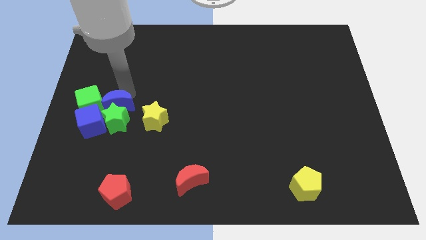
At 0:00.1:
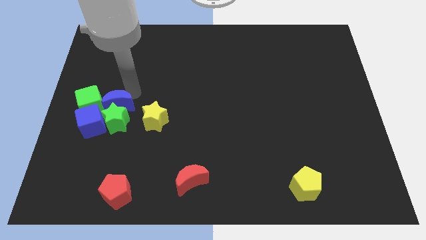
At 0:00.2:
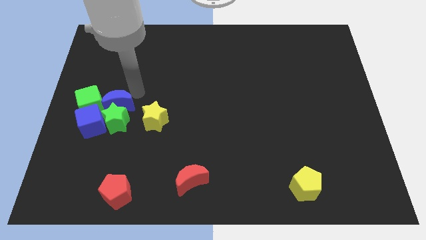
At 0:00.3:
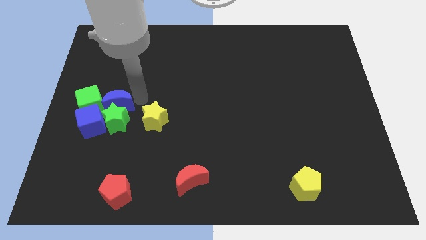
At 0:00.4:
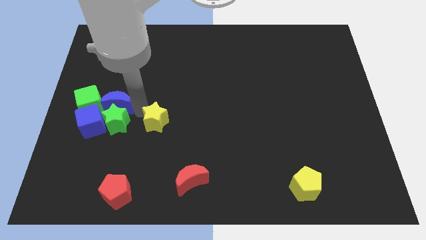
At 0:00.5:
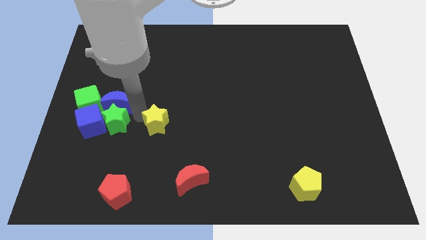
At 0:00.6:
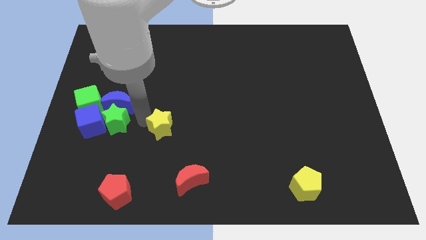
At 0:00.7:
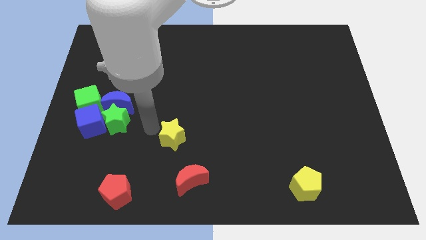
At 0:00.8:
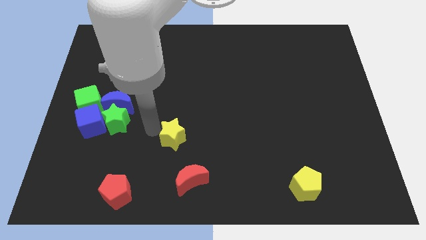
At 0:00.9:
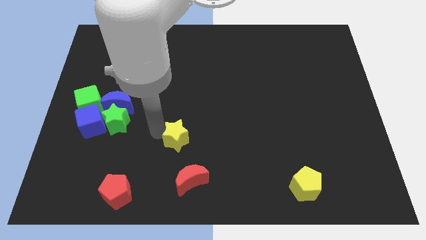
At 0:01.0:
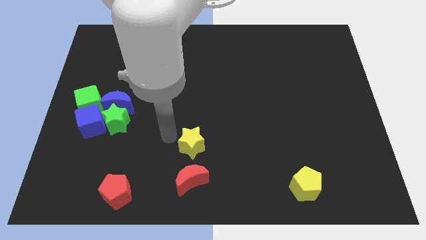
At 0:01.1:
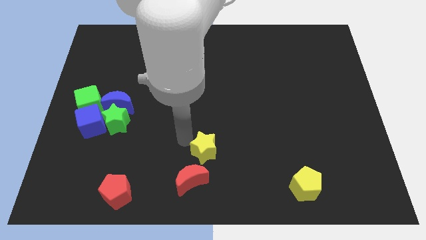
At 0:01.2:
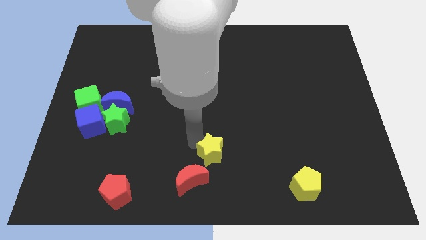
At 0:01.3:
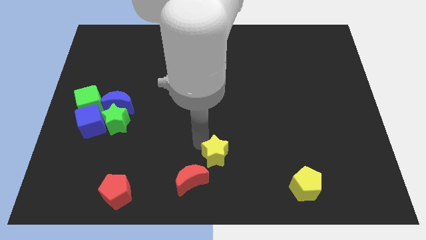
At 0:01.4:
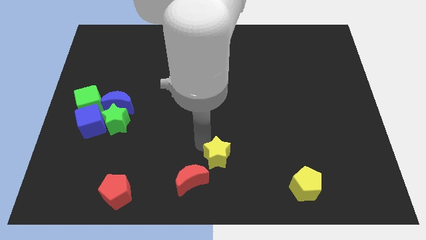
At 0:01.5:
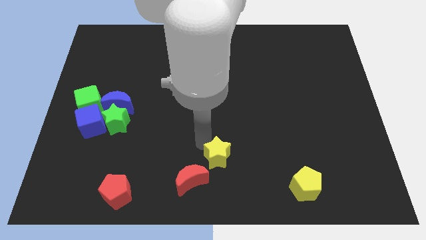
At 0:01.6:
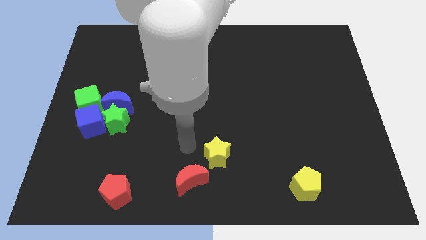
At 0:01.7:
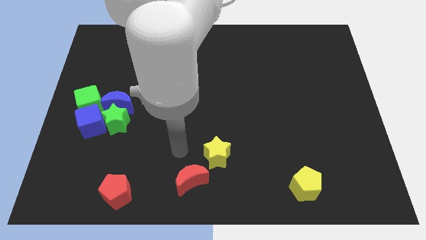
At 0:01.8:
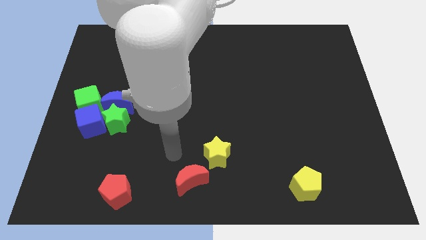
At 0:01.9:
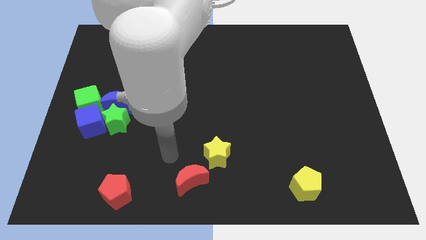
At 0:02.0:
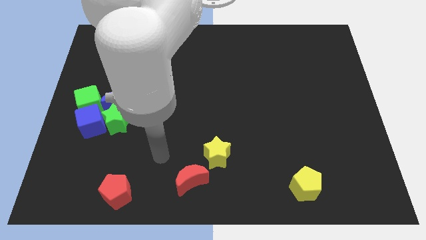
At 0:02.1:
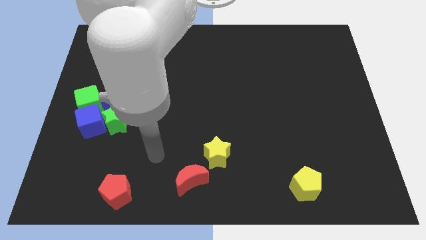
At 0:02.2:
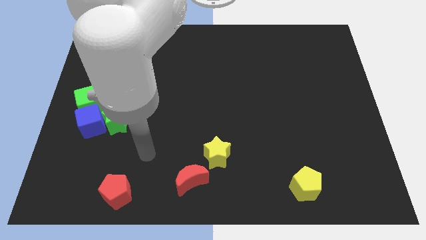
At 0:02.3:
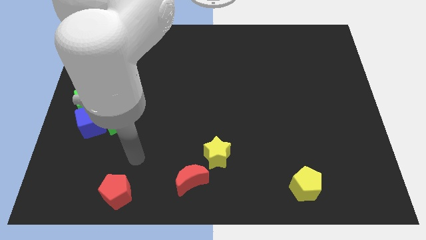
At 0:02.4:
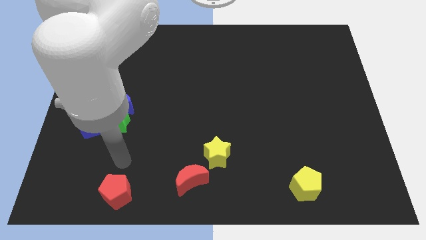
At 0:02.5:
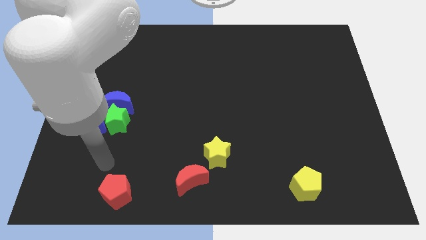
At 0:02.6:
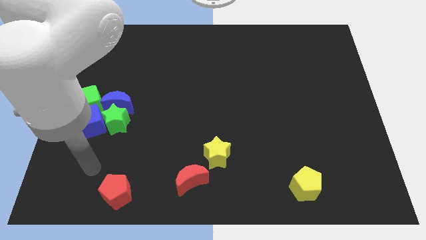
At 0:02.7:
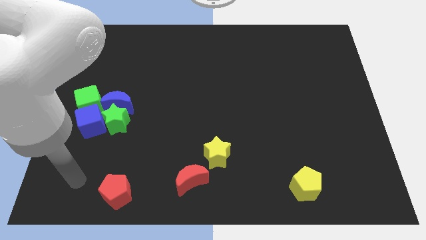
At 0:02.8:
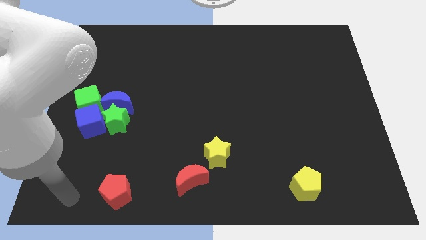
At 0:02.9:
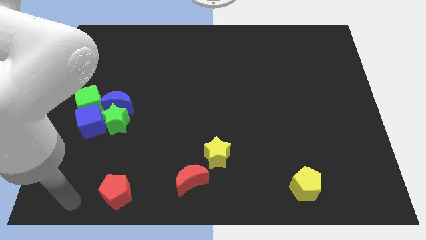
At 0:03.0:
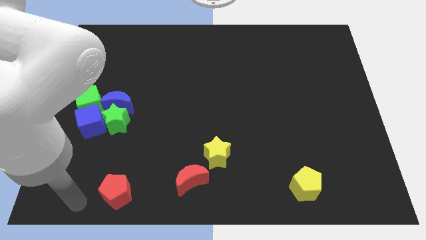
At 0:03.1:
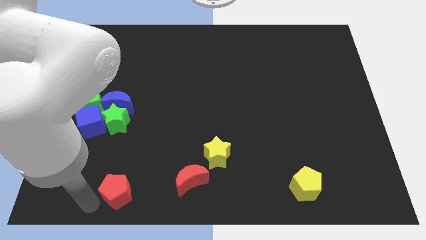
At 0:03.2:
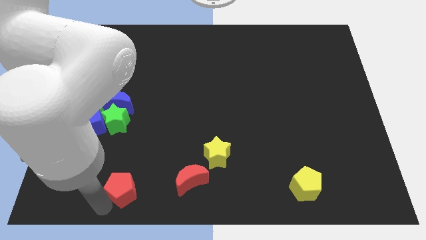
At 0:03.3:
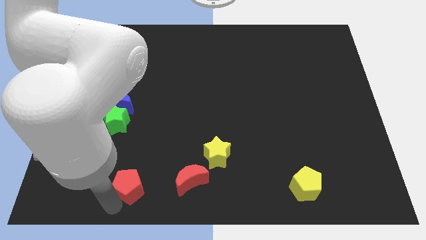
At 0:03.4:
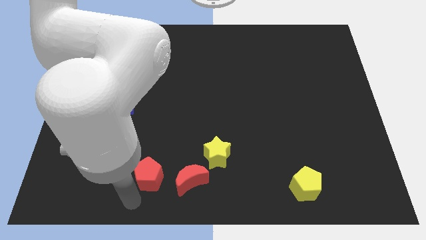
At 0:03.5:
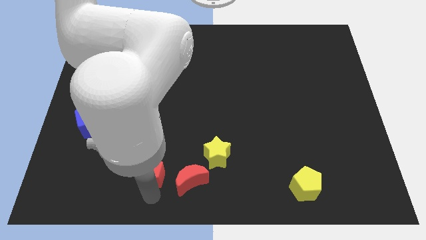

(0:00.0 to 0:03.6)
move red pentagon to the left of red moon

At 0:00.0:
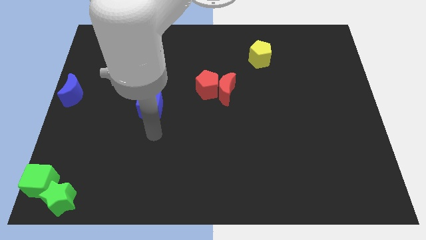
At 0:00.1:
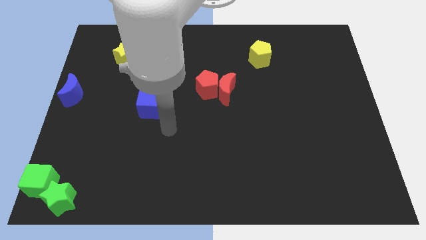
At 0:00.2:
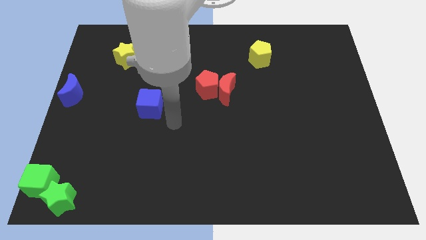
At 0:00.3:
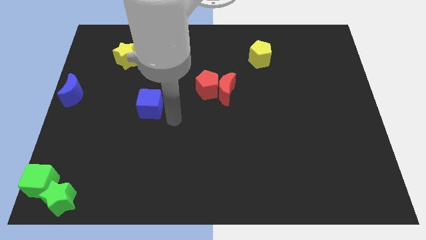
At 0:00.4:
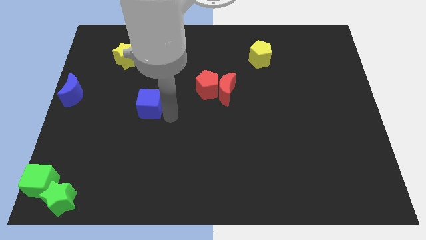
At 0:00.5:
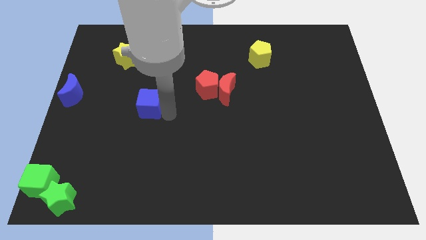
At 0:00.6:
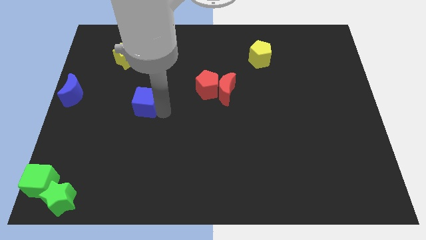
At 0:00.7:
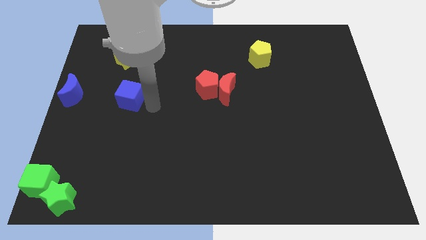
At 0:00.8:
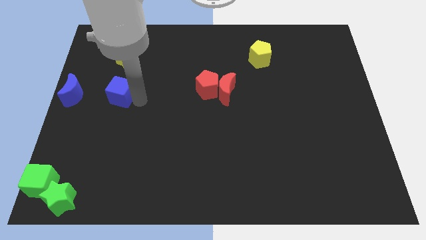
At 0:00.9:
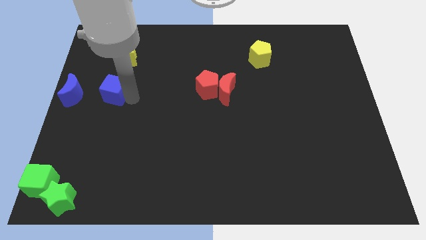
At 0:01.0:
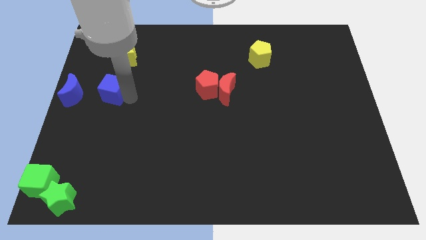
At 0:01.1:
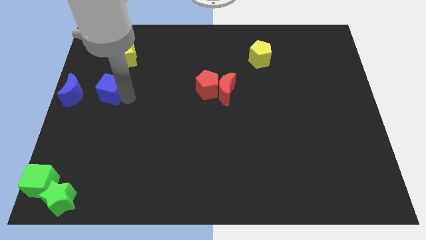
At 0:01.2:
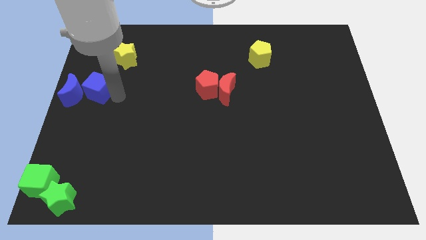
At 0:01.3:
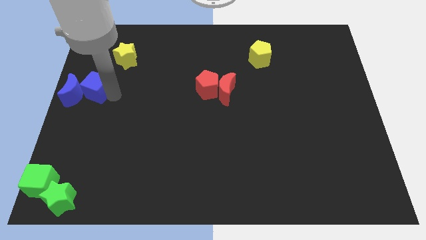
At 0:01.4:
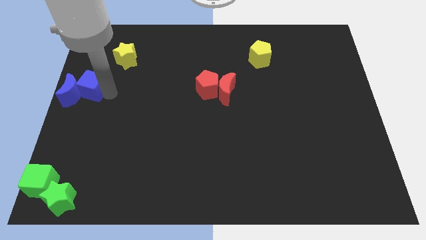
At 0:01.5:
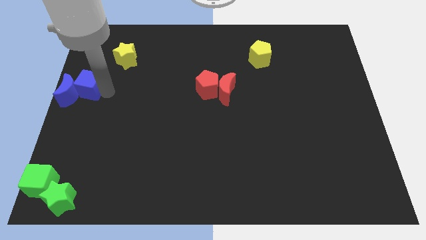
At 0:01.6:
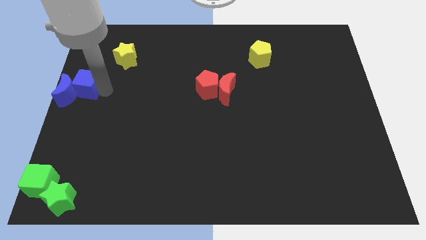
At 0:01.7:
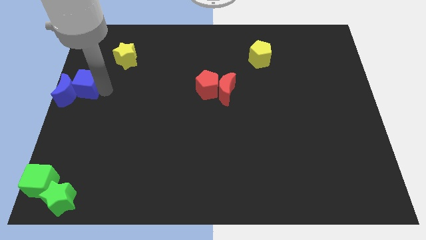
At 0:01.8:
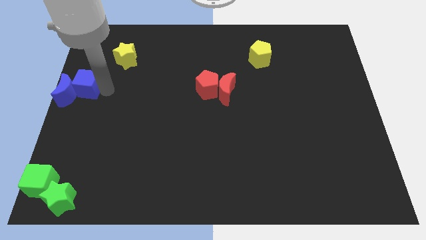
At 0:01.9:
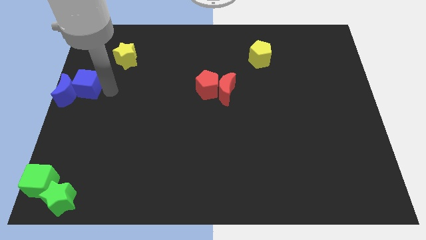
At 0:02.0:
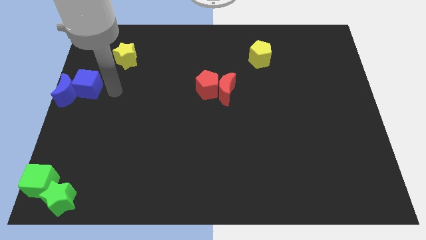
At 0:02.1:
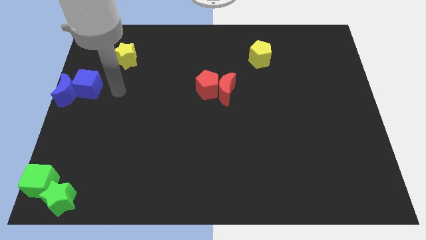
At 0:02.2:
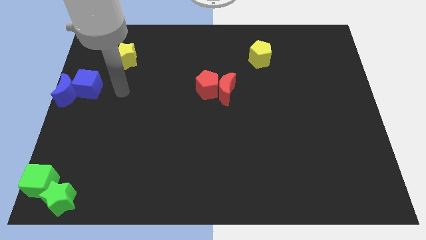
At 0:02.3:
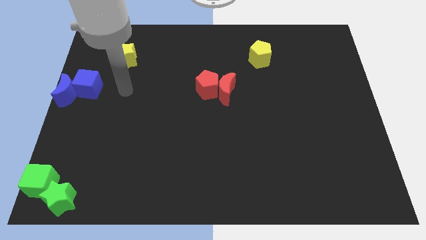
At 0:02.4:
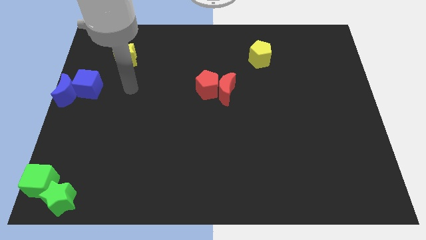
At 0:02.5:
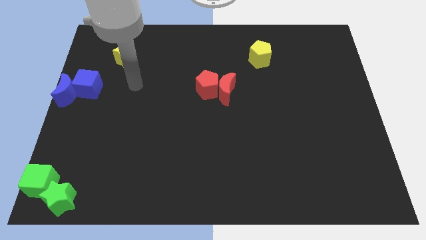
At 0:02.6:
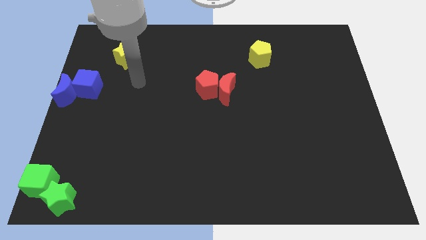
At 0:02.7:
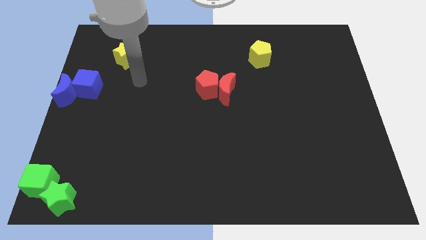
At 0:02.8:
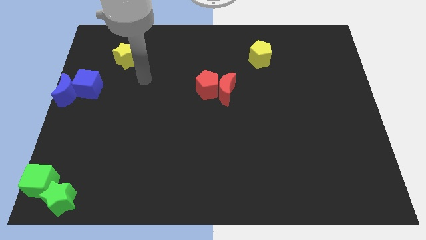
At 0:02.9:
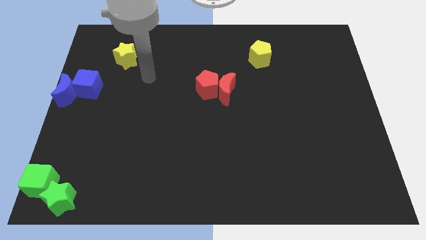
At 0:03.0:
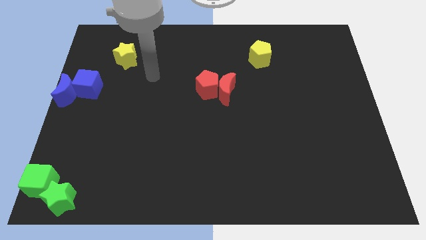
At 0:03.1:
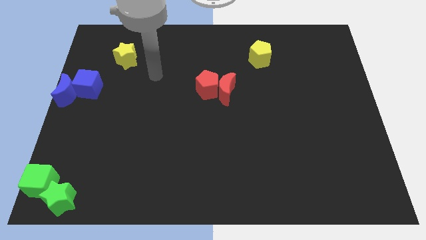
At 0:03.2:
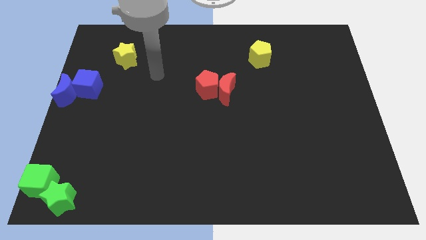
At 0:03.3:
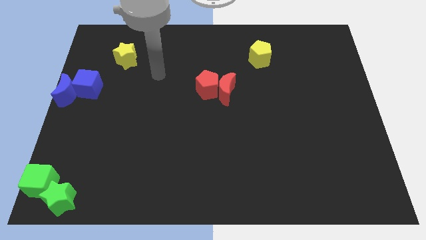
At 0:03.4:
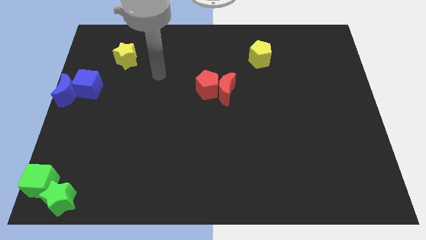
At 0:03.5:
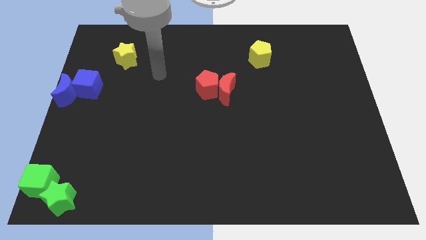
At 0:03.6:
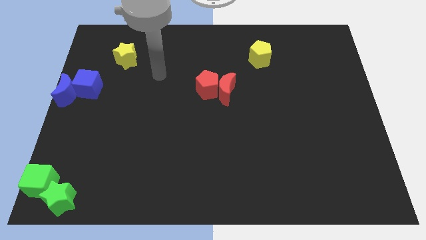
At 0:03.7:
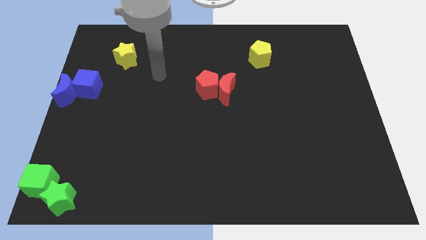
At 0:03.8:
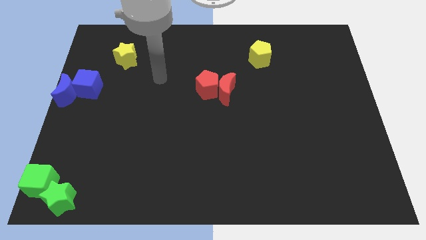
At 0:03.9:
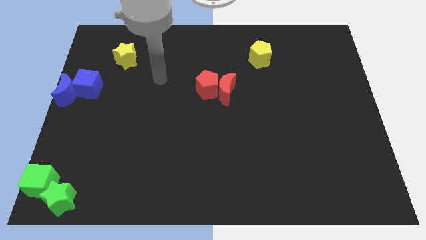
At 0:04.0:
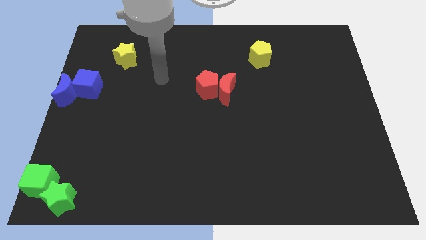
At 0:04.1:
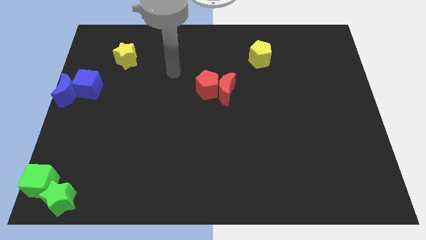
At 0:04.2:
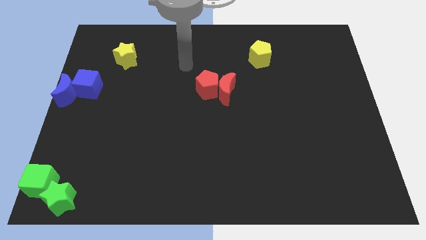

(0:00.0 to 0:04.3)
drag the blue cube into blue moon to the center left

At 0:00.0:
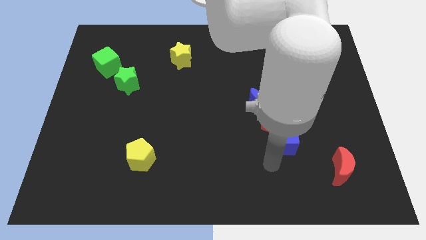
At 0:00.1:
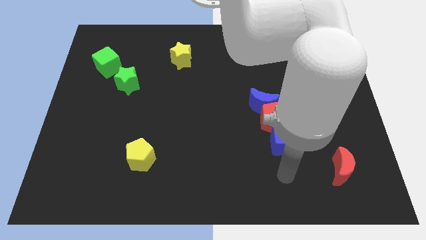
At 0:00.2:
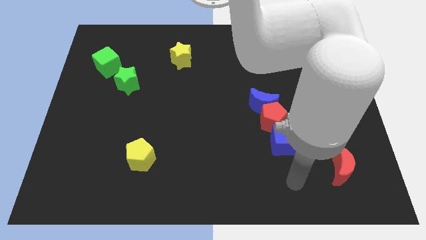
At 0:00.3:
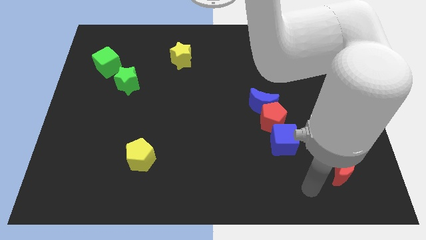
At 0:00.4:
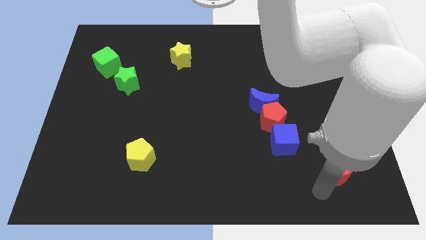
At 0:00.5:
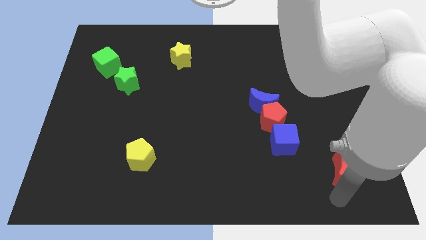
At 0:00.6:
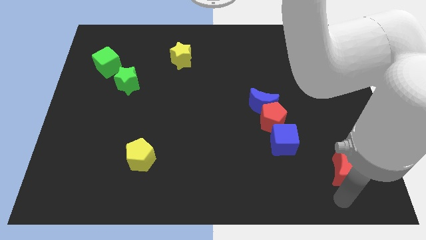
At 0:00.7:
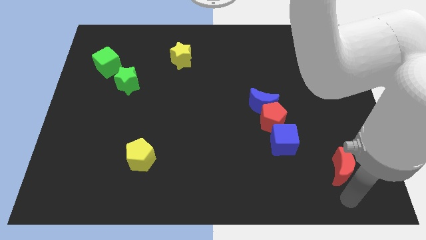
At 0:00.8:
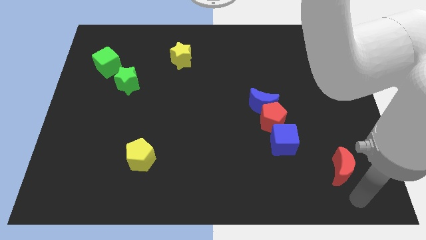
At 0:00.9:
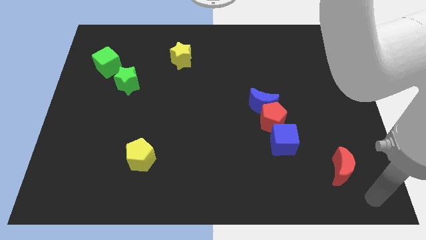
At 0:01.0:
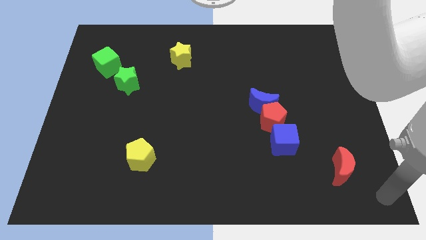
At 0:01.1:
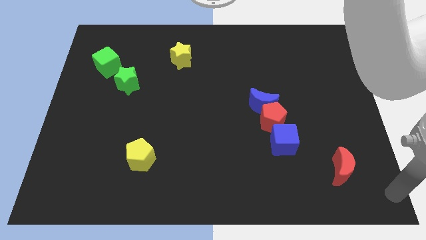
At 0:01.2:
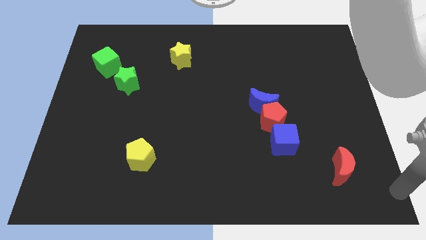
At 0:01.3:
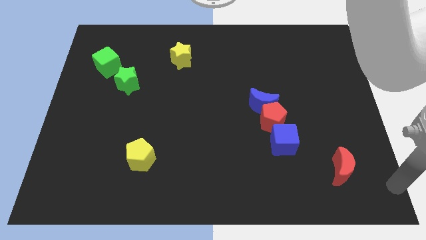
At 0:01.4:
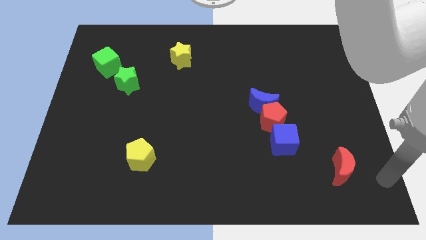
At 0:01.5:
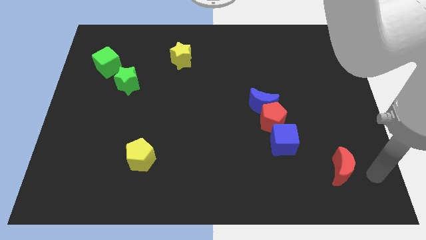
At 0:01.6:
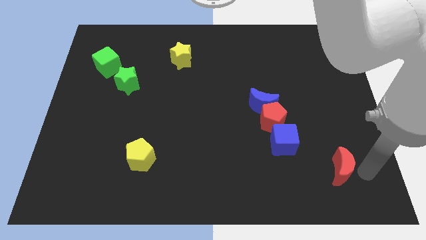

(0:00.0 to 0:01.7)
point your arm at the right side of the red crescent
